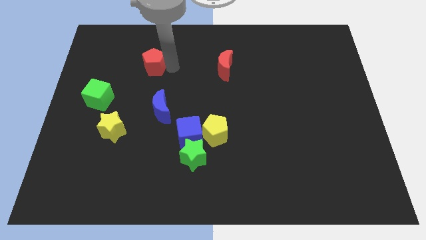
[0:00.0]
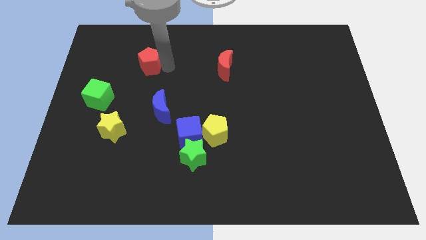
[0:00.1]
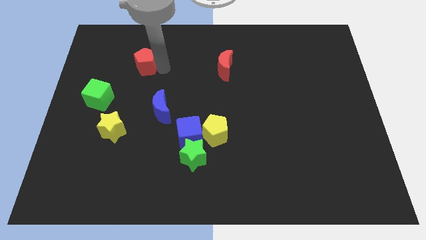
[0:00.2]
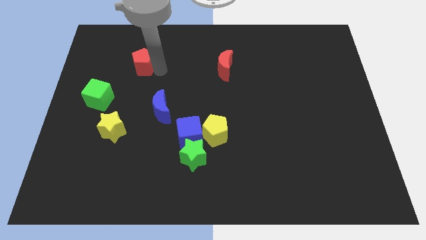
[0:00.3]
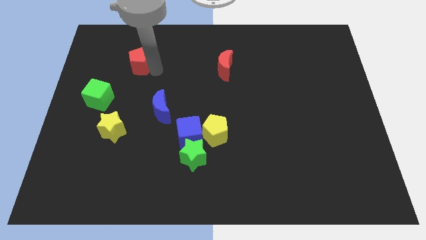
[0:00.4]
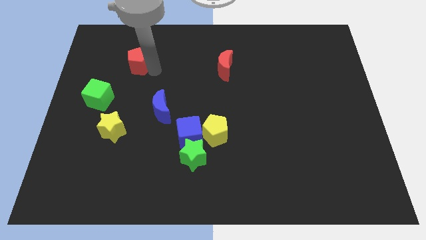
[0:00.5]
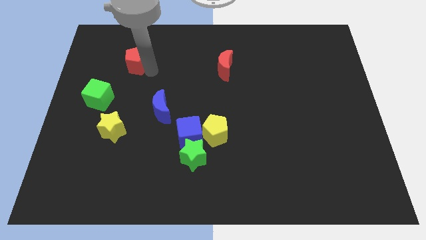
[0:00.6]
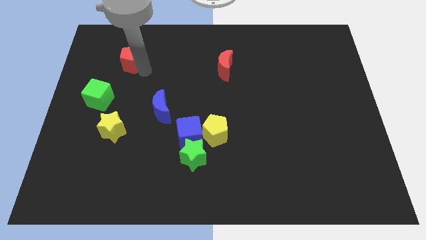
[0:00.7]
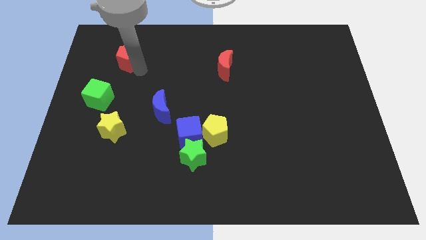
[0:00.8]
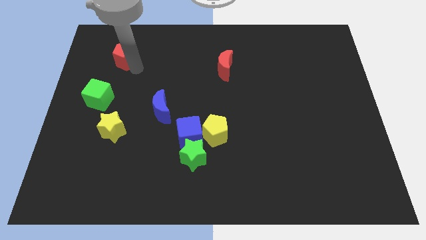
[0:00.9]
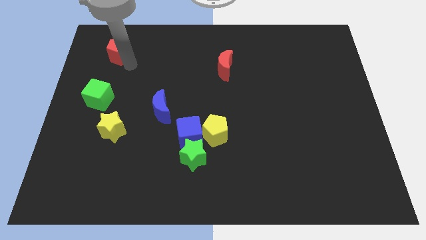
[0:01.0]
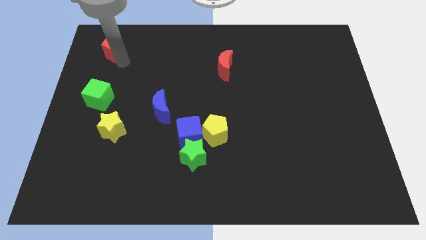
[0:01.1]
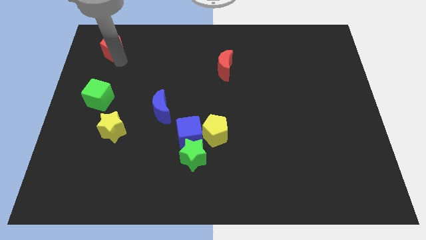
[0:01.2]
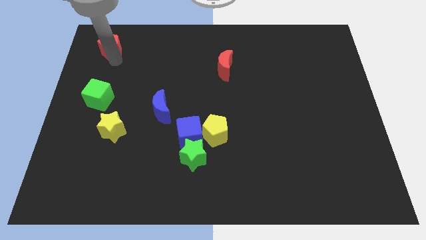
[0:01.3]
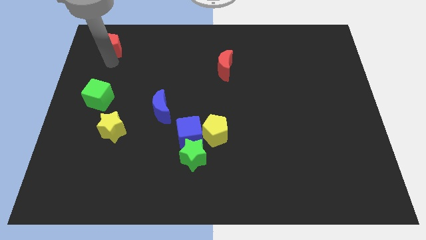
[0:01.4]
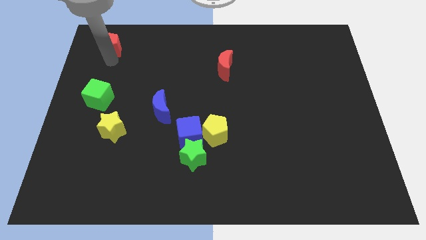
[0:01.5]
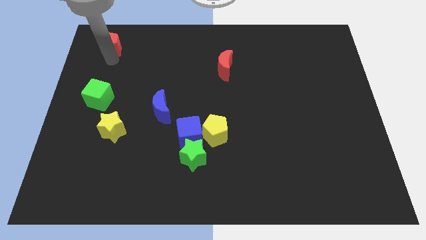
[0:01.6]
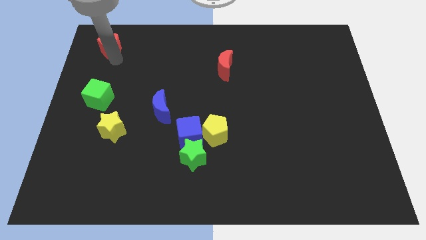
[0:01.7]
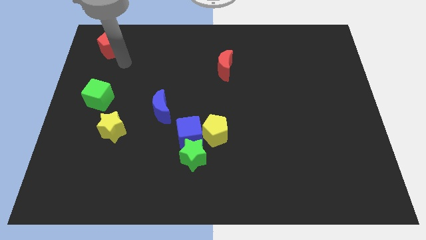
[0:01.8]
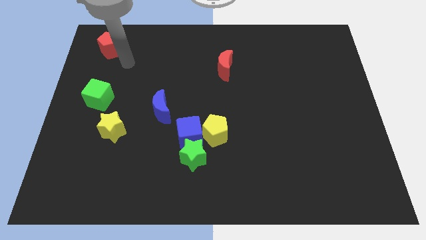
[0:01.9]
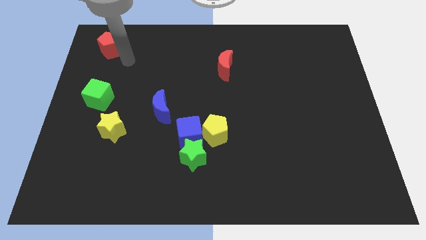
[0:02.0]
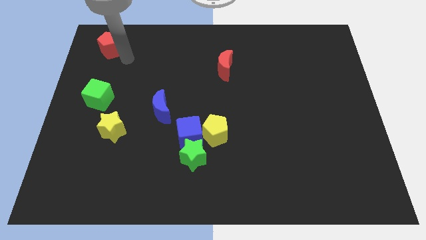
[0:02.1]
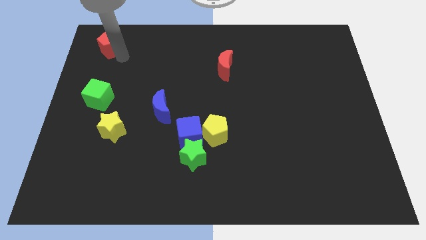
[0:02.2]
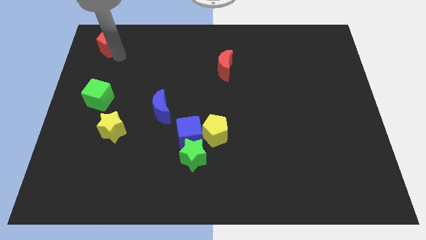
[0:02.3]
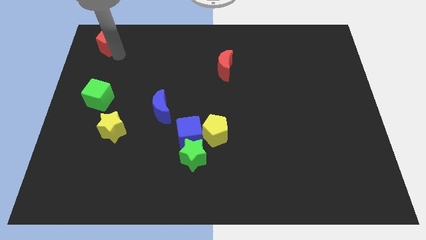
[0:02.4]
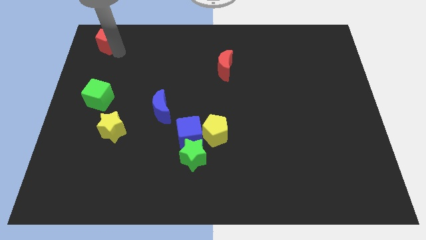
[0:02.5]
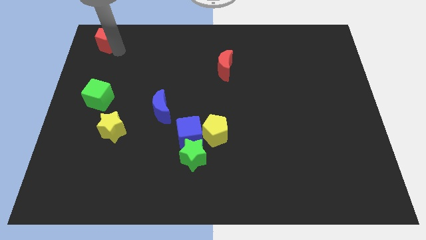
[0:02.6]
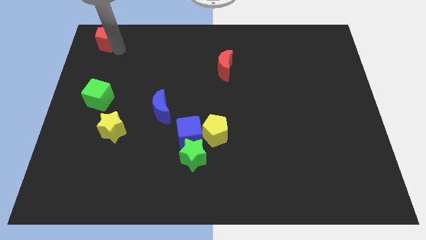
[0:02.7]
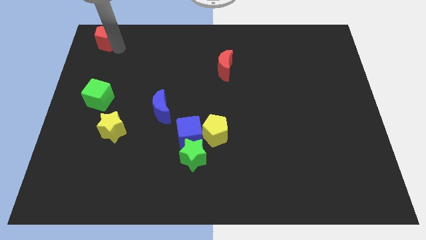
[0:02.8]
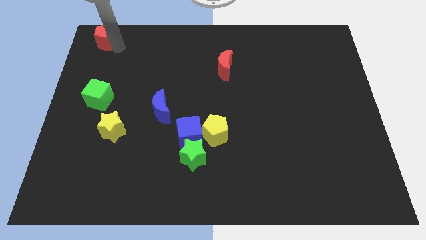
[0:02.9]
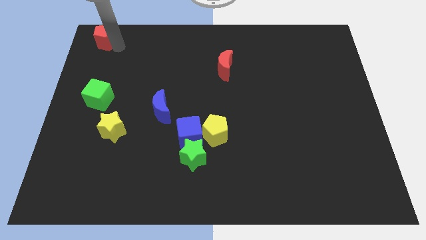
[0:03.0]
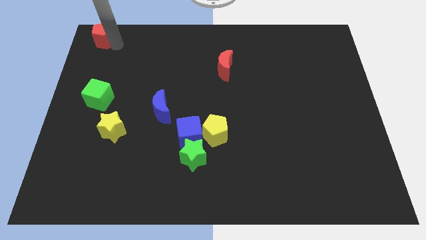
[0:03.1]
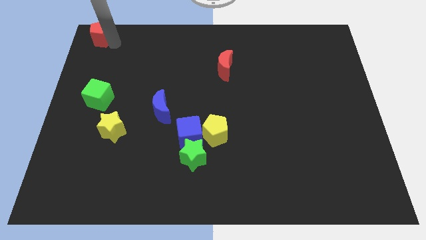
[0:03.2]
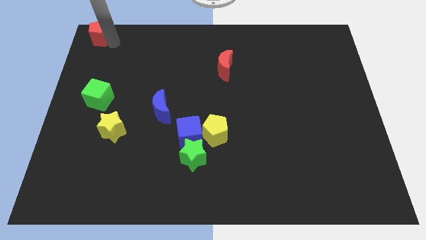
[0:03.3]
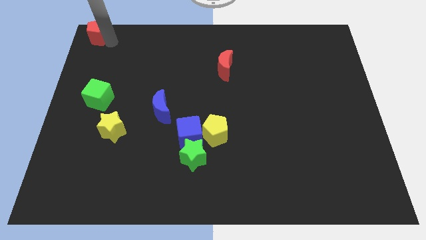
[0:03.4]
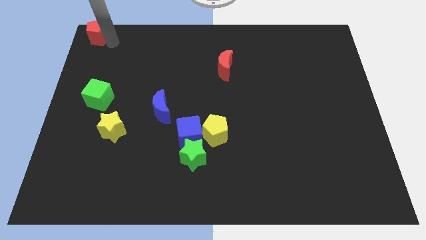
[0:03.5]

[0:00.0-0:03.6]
push the red pentagon to the top left corner on the board

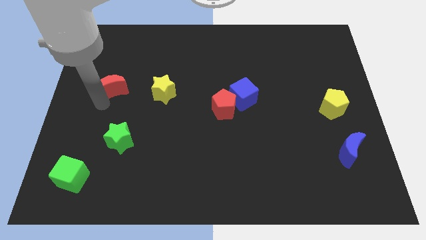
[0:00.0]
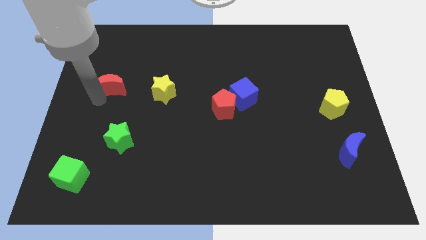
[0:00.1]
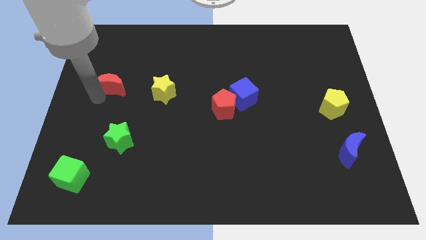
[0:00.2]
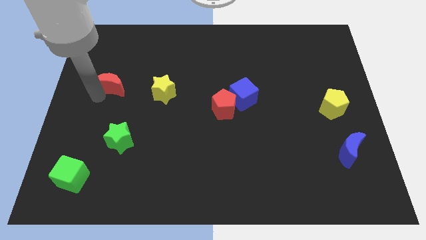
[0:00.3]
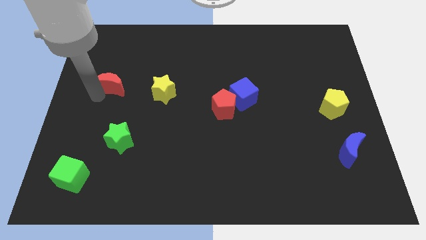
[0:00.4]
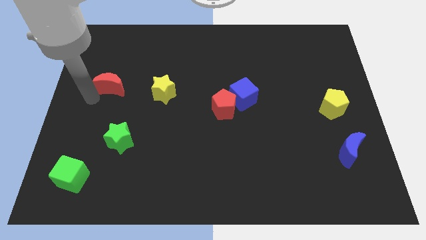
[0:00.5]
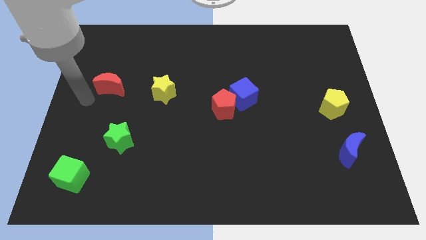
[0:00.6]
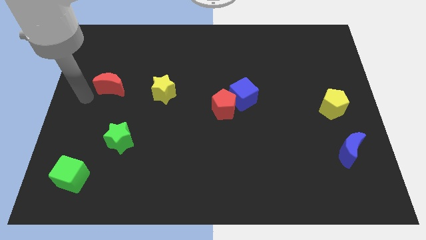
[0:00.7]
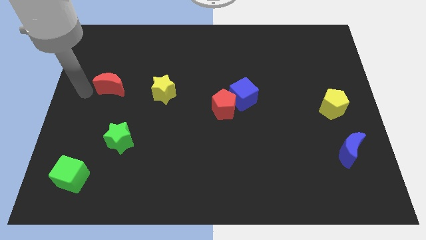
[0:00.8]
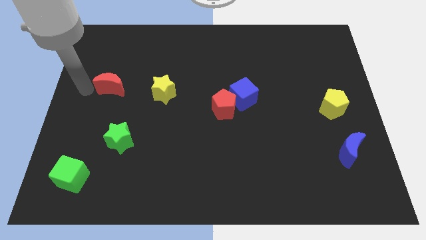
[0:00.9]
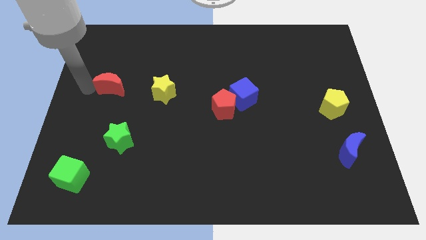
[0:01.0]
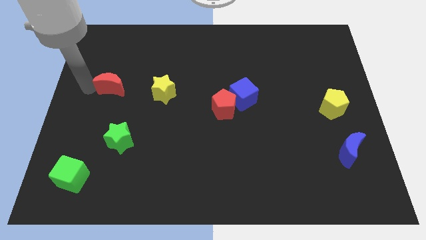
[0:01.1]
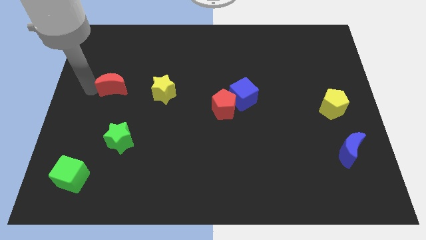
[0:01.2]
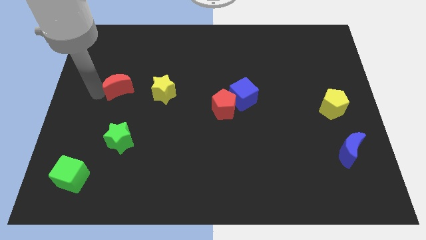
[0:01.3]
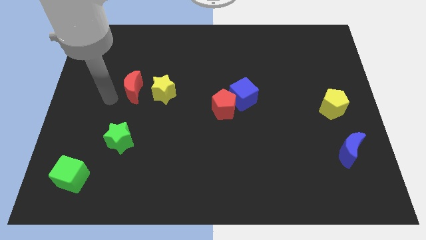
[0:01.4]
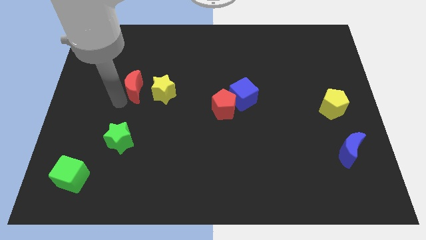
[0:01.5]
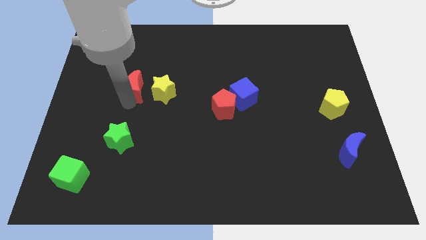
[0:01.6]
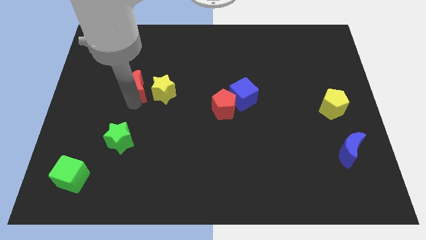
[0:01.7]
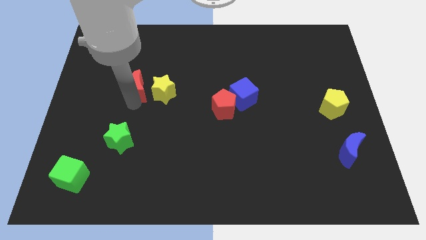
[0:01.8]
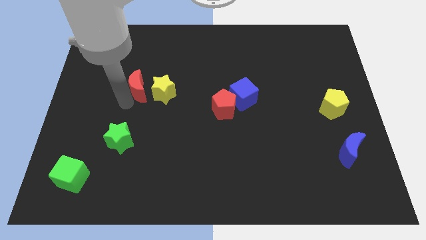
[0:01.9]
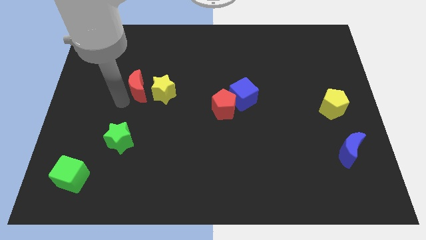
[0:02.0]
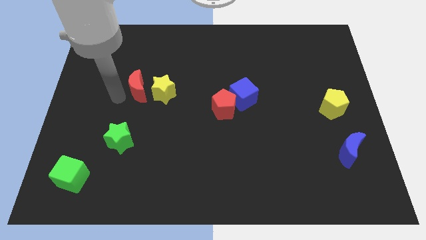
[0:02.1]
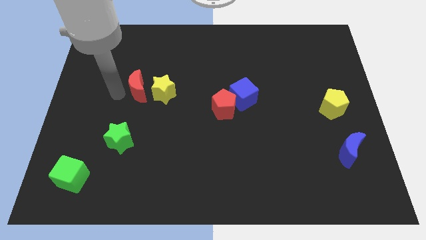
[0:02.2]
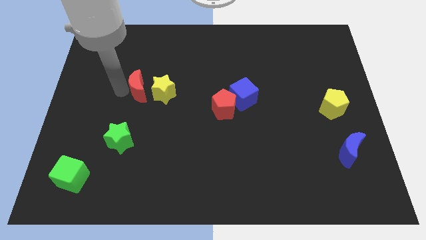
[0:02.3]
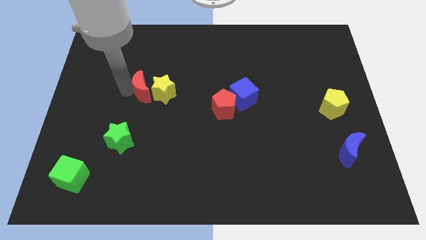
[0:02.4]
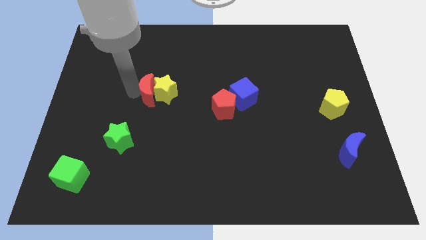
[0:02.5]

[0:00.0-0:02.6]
push the red moon to the left of yellow star

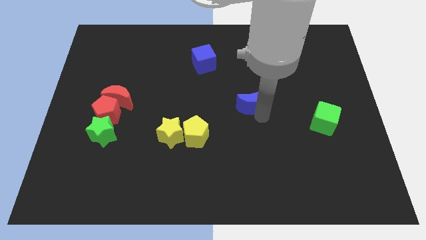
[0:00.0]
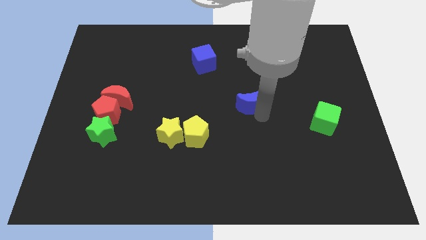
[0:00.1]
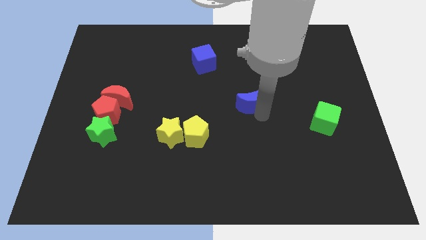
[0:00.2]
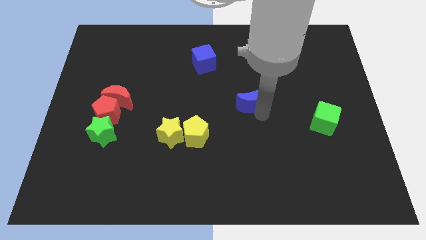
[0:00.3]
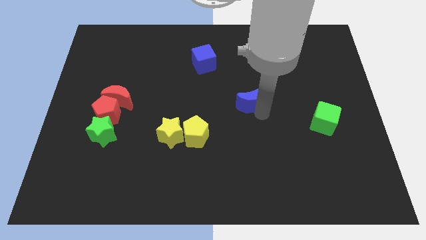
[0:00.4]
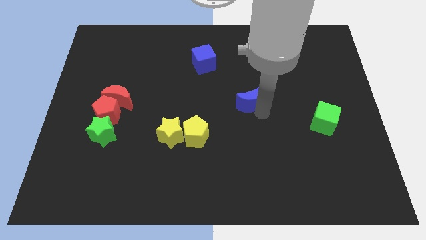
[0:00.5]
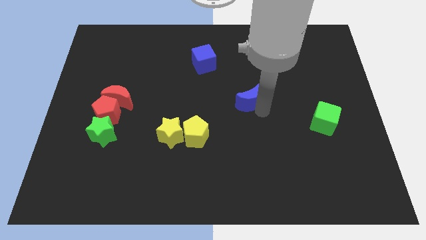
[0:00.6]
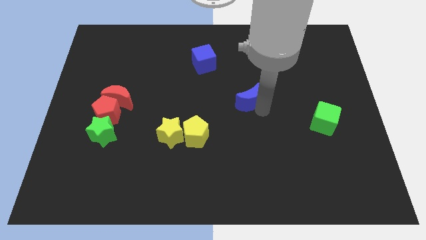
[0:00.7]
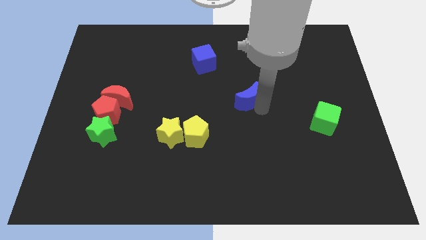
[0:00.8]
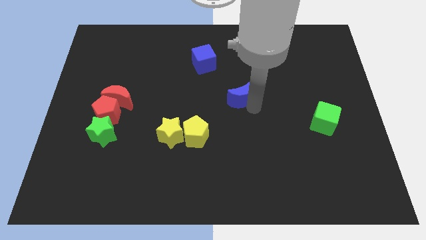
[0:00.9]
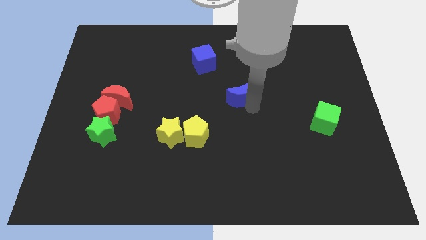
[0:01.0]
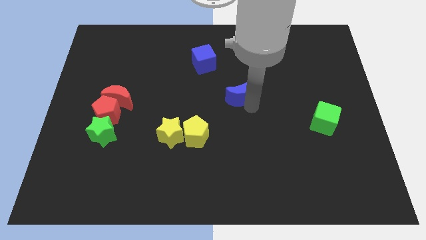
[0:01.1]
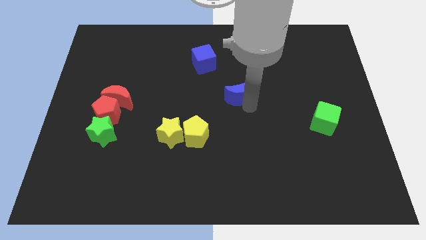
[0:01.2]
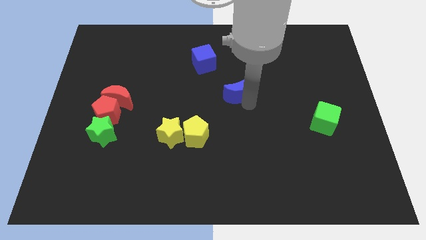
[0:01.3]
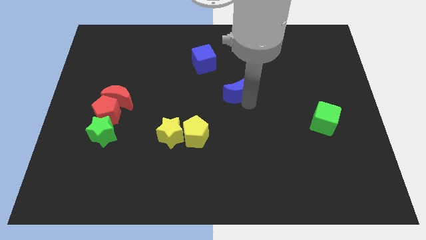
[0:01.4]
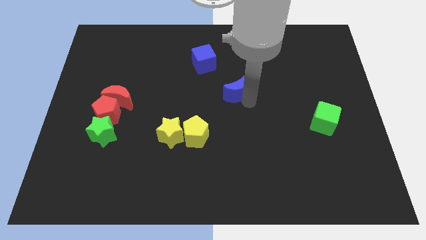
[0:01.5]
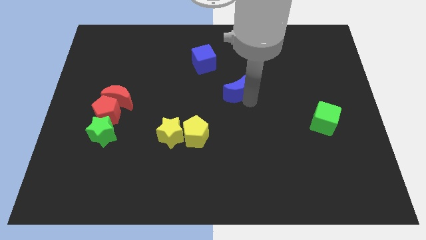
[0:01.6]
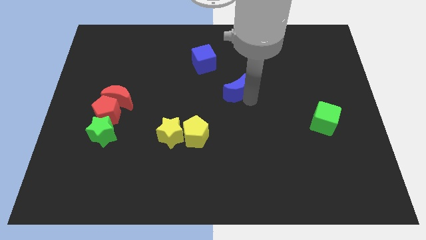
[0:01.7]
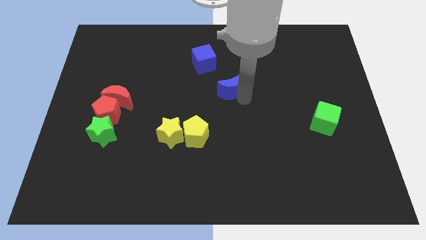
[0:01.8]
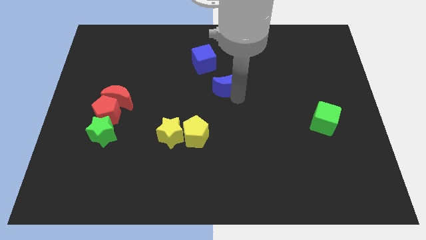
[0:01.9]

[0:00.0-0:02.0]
take the blue crescent towards the blue cube

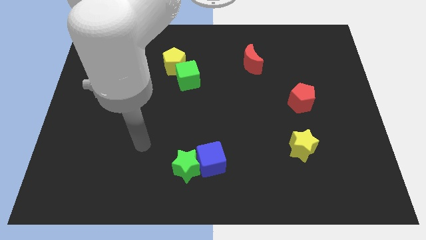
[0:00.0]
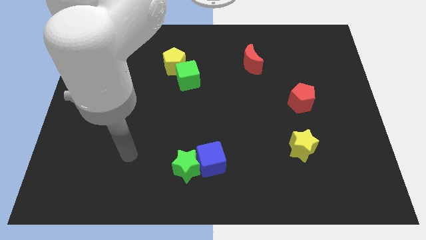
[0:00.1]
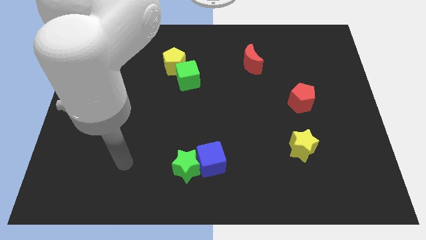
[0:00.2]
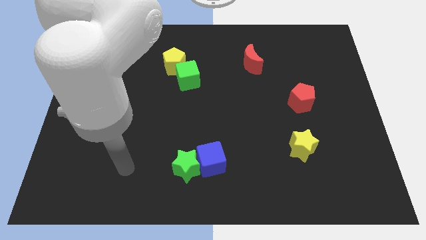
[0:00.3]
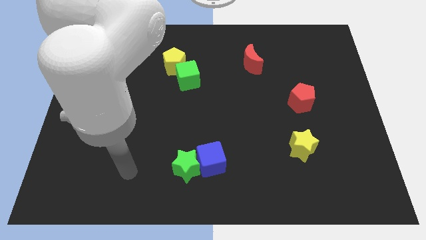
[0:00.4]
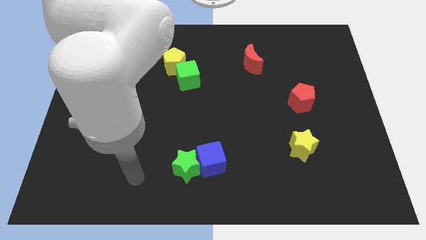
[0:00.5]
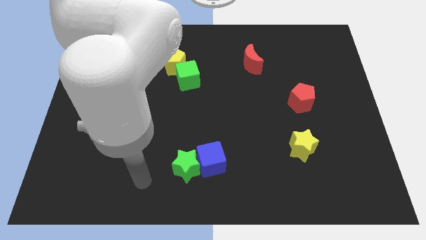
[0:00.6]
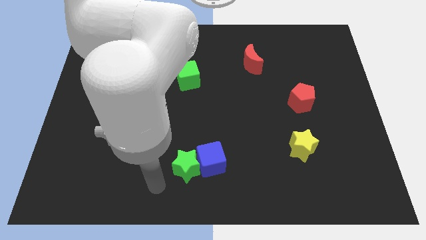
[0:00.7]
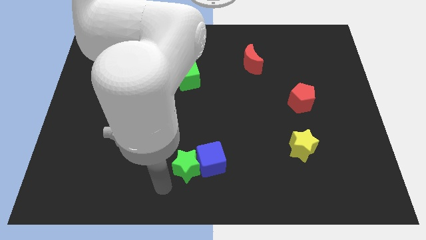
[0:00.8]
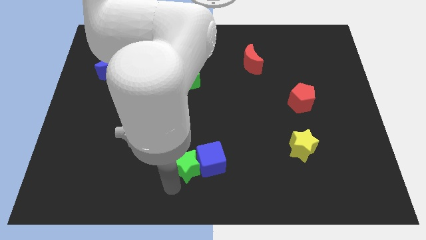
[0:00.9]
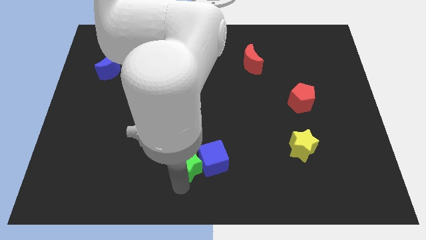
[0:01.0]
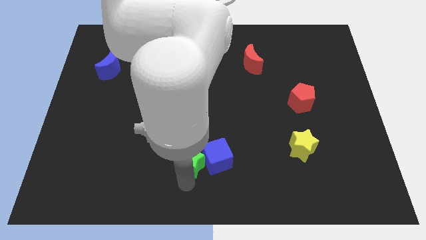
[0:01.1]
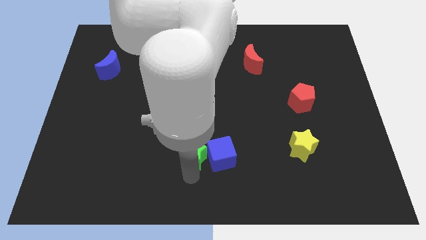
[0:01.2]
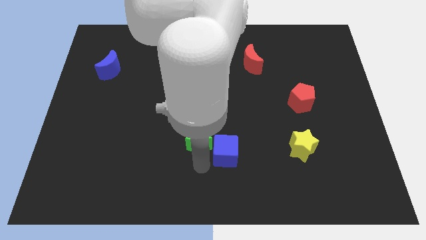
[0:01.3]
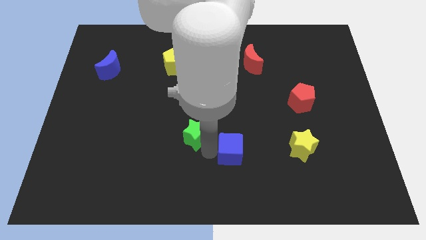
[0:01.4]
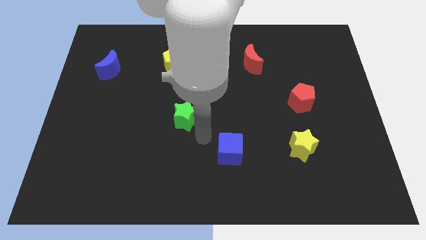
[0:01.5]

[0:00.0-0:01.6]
separate the green star from the blue cube
